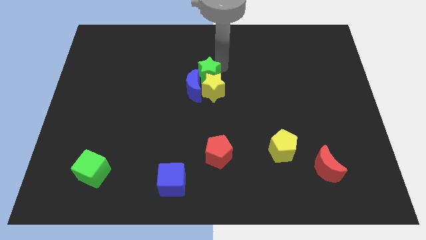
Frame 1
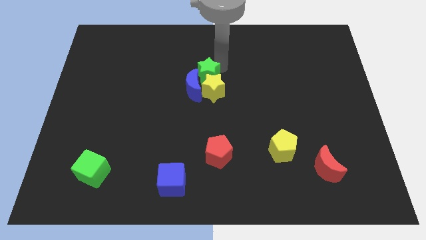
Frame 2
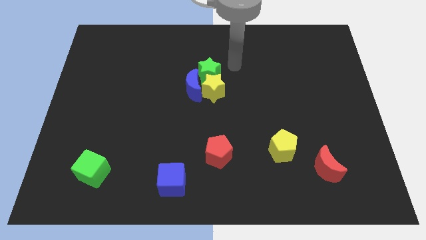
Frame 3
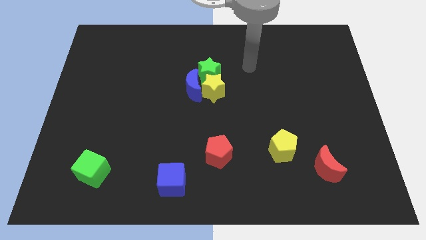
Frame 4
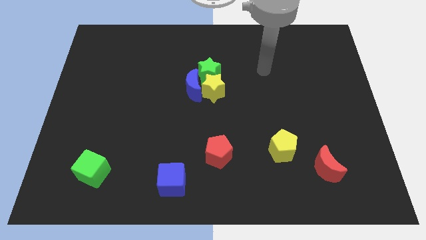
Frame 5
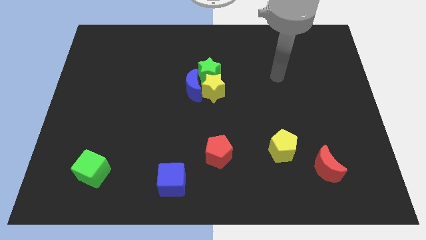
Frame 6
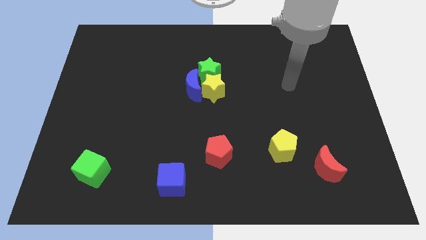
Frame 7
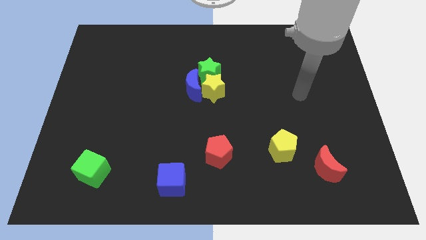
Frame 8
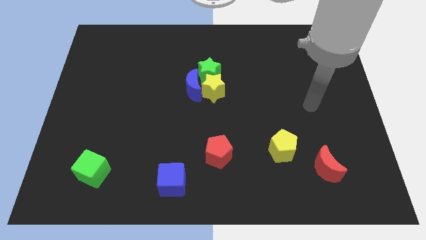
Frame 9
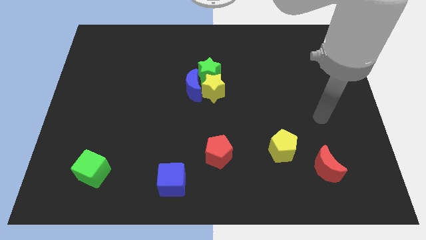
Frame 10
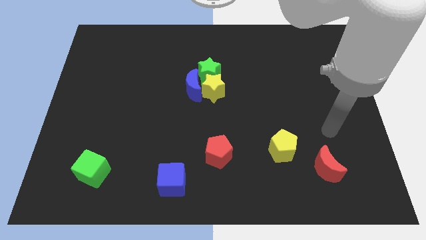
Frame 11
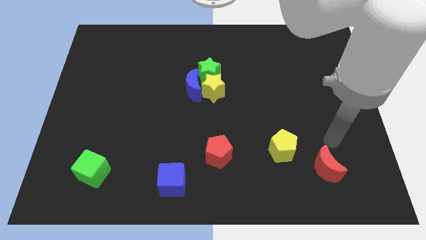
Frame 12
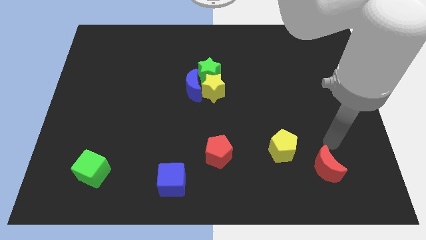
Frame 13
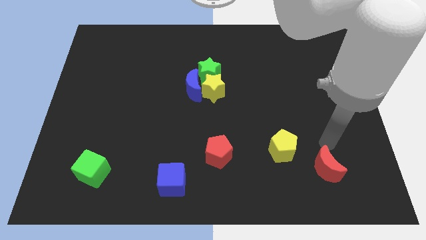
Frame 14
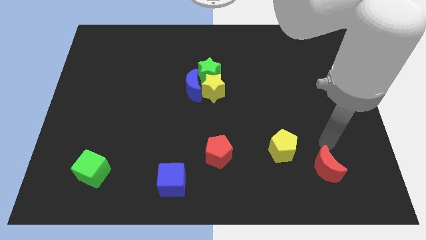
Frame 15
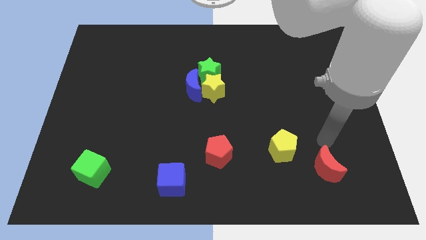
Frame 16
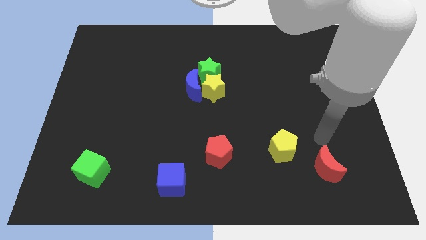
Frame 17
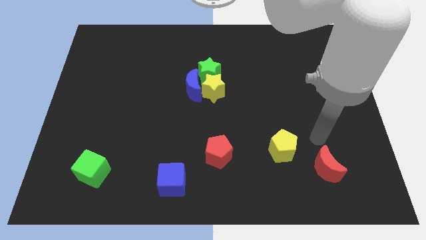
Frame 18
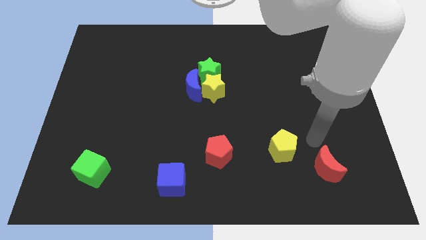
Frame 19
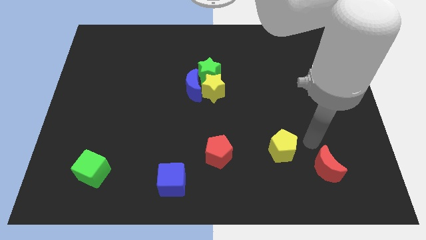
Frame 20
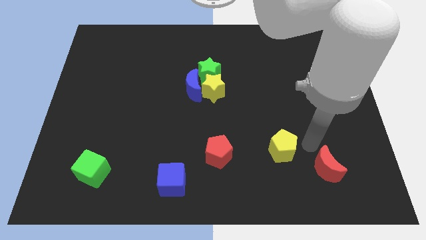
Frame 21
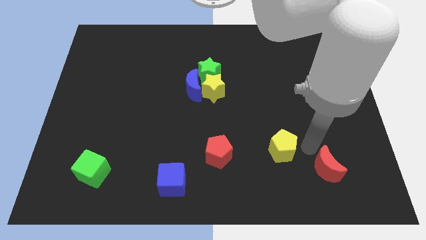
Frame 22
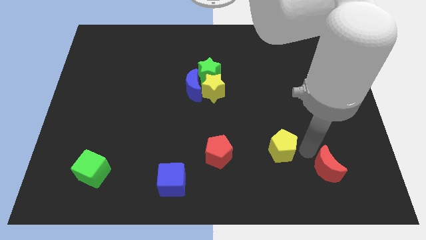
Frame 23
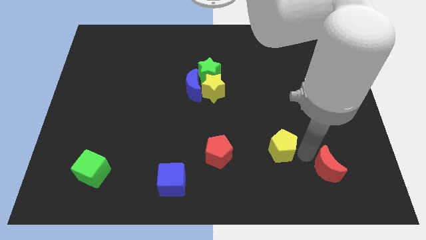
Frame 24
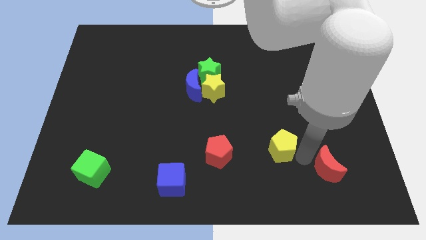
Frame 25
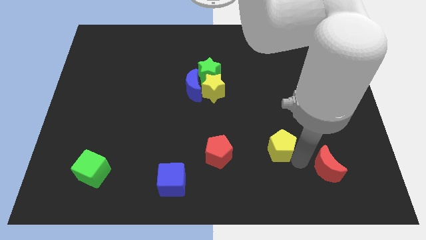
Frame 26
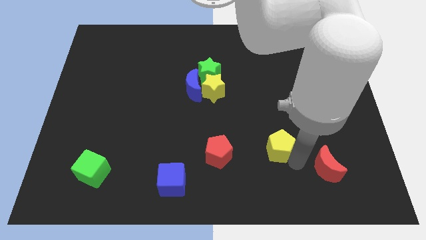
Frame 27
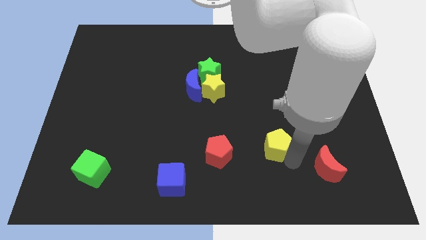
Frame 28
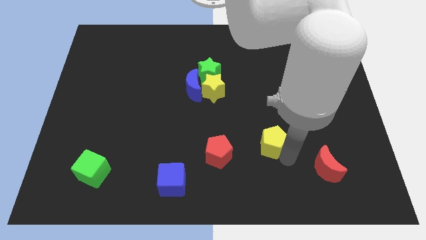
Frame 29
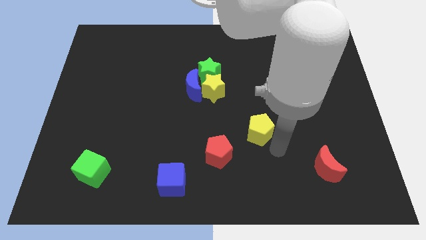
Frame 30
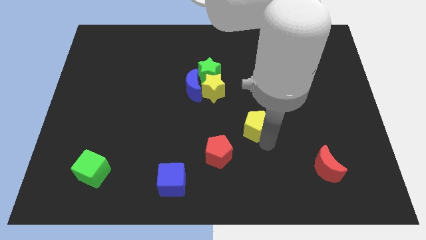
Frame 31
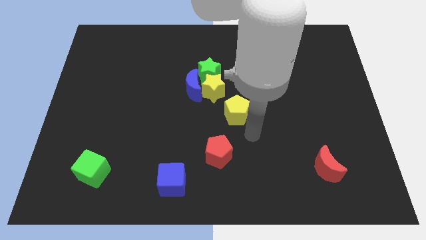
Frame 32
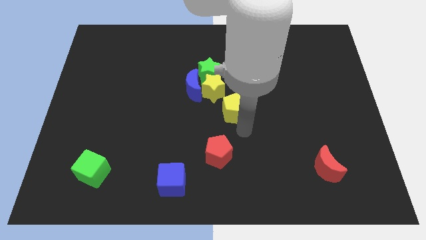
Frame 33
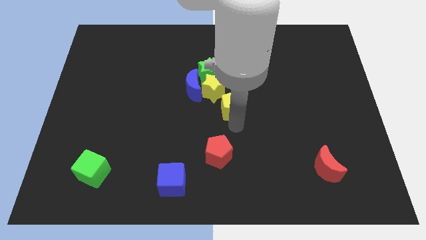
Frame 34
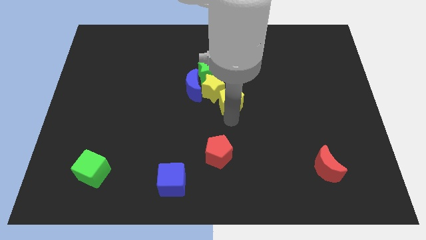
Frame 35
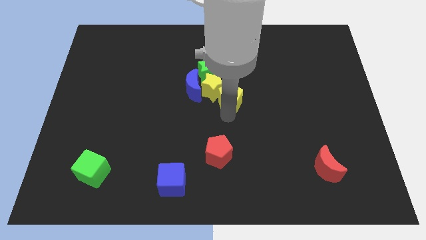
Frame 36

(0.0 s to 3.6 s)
move the yellow pentagon close to the bottom of the yellow star

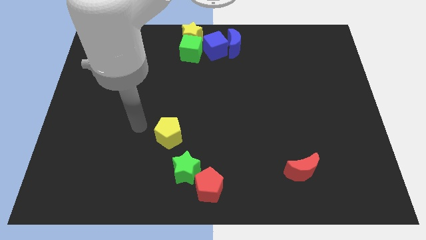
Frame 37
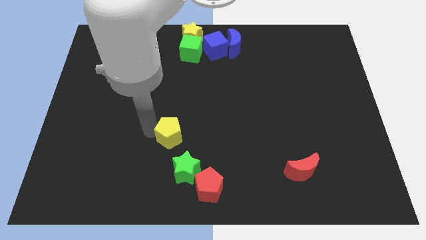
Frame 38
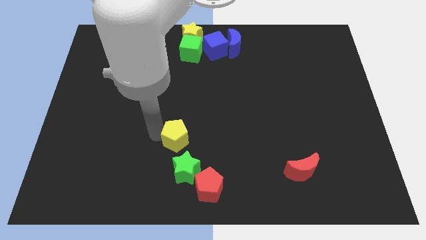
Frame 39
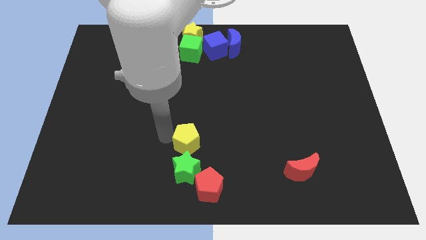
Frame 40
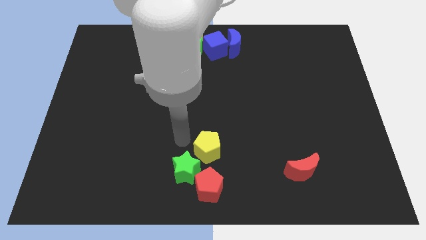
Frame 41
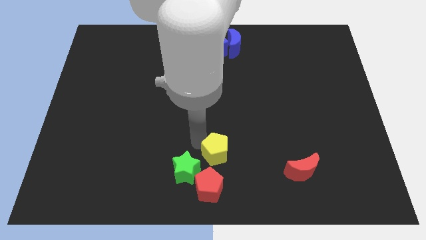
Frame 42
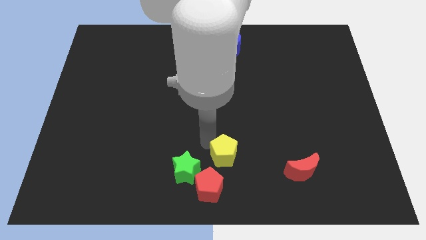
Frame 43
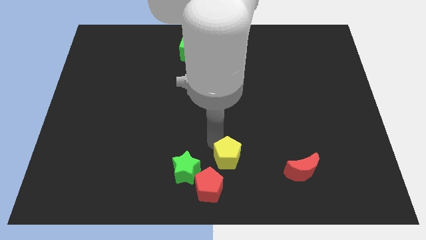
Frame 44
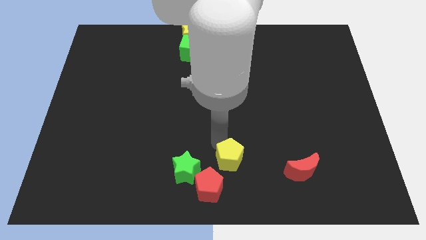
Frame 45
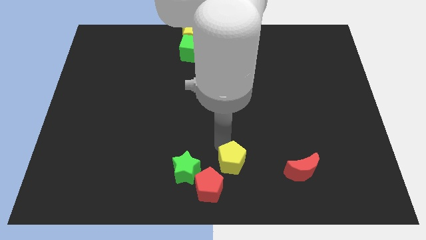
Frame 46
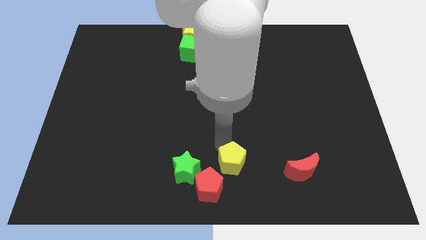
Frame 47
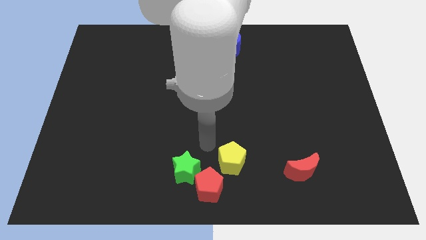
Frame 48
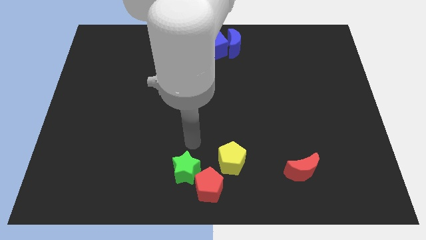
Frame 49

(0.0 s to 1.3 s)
move yellow pentagon near red pentagon

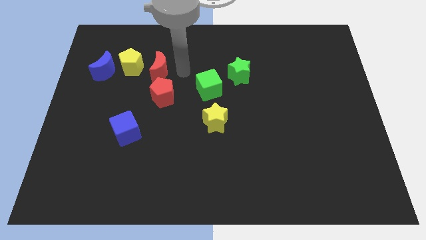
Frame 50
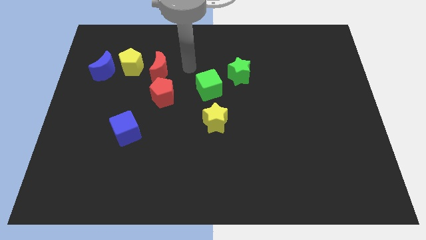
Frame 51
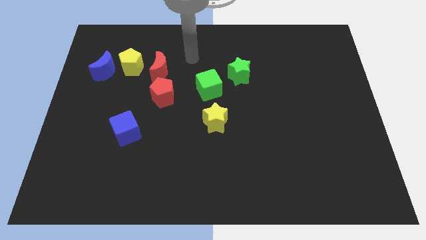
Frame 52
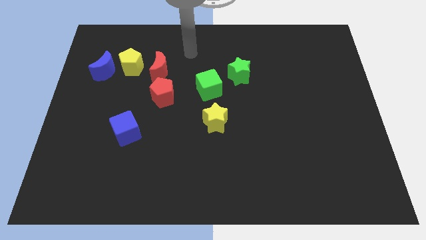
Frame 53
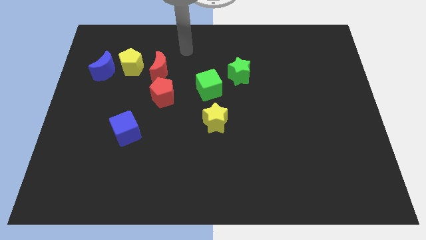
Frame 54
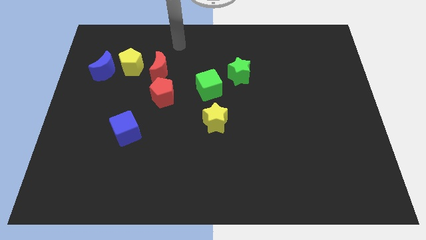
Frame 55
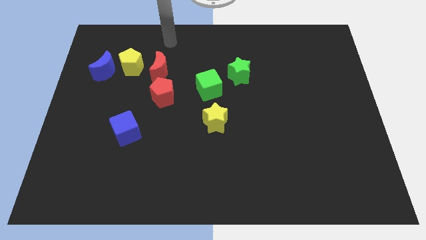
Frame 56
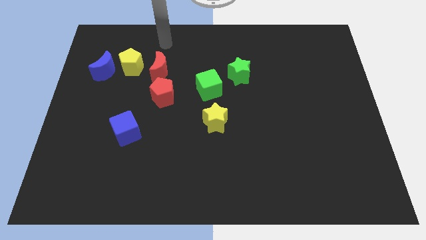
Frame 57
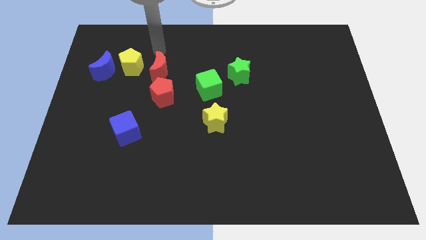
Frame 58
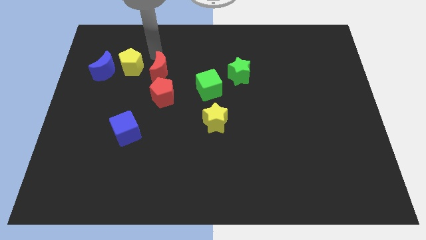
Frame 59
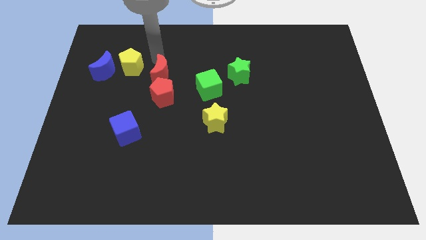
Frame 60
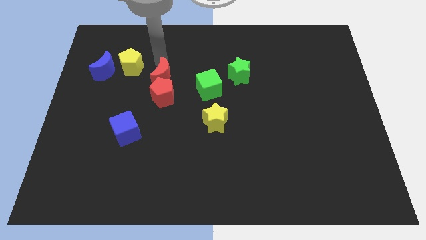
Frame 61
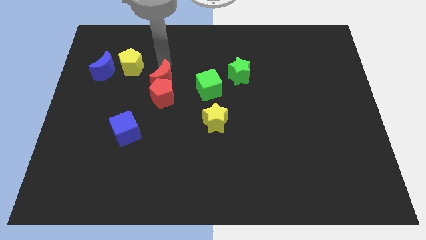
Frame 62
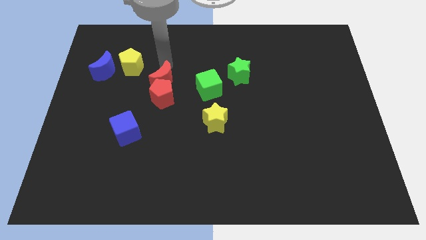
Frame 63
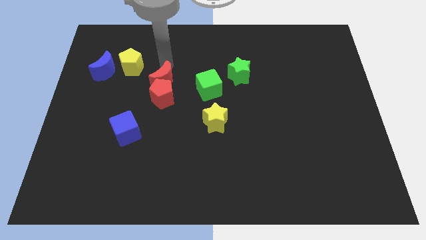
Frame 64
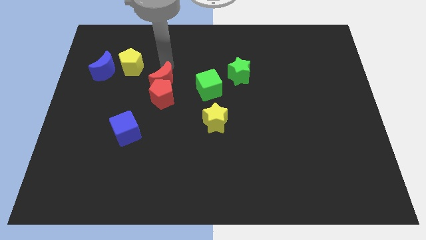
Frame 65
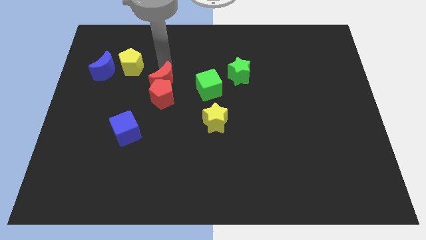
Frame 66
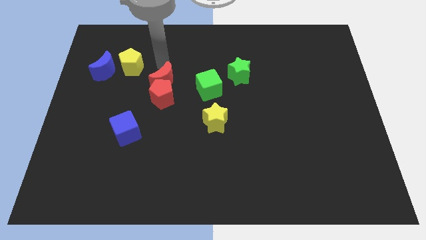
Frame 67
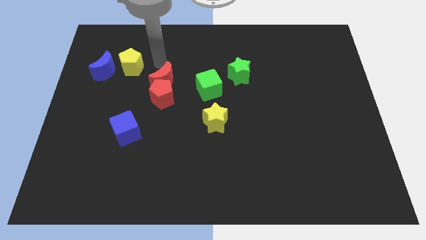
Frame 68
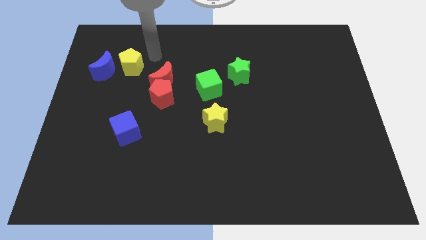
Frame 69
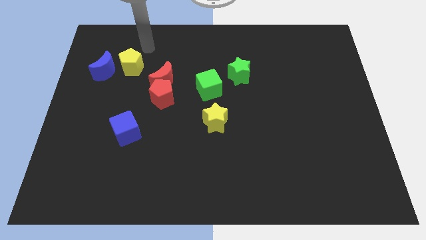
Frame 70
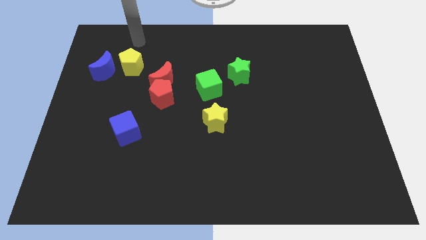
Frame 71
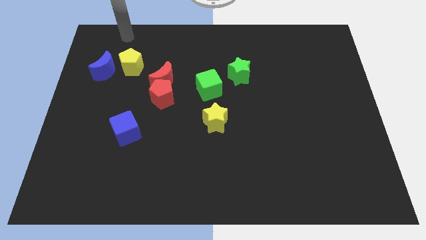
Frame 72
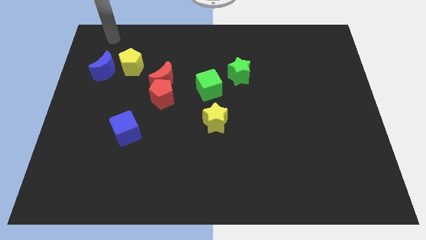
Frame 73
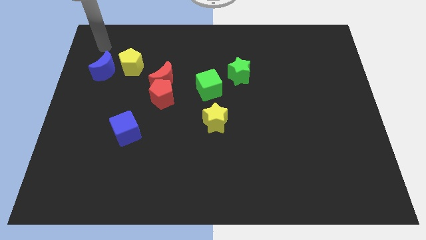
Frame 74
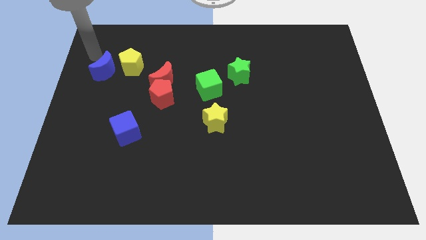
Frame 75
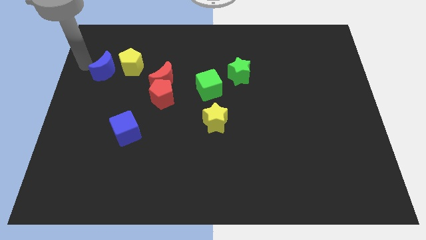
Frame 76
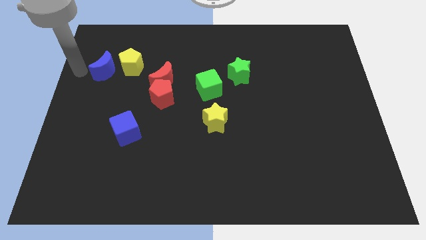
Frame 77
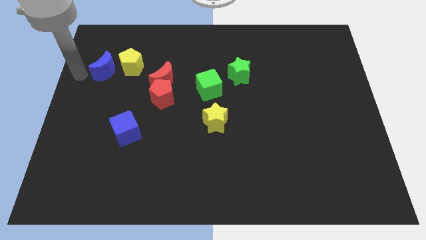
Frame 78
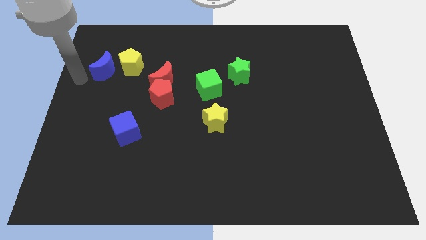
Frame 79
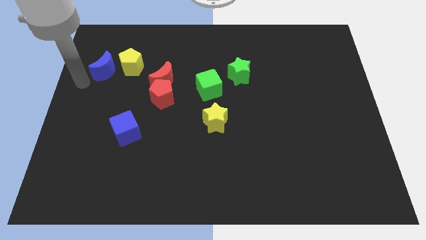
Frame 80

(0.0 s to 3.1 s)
move the red crescent into the red pentagon

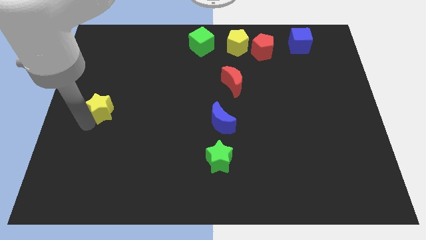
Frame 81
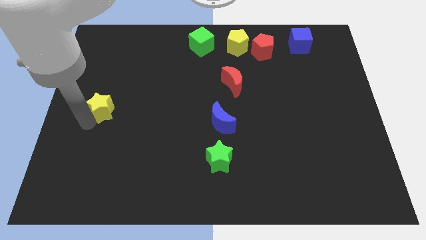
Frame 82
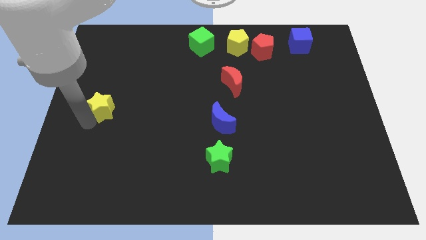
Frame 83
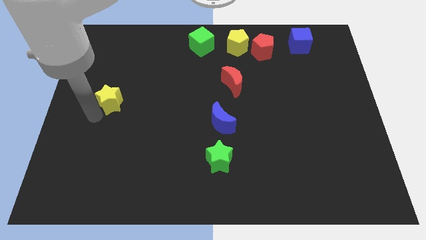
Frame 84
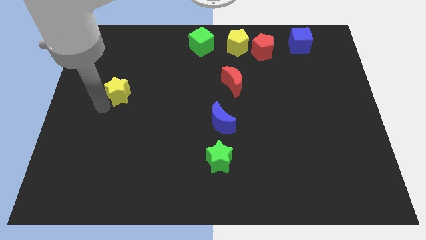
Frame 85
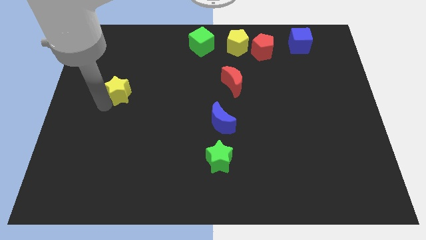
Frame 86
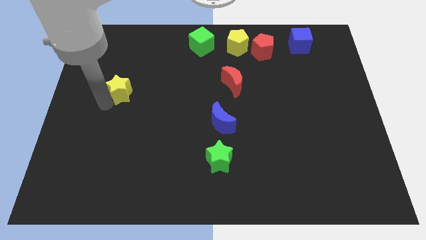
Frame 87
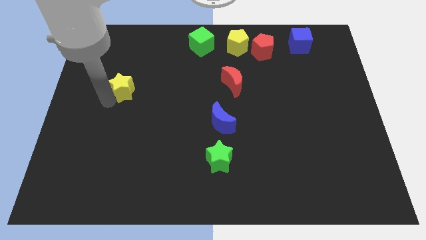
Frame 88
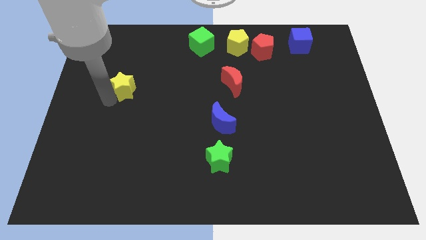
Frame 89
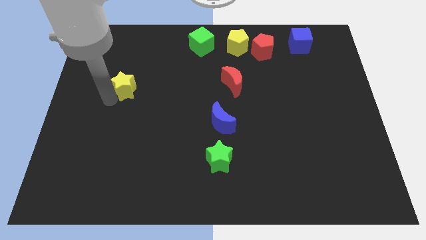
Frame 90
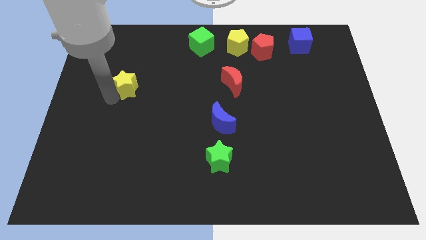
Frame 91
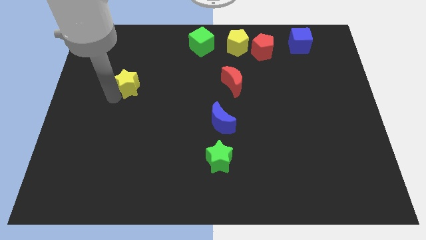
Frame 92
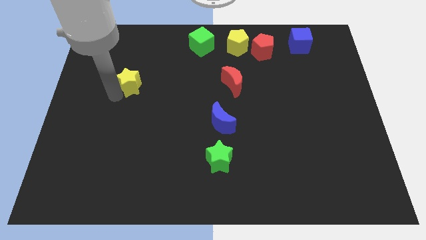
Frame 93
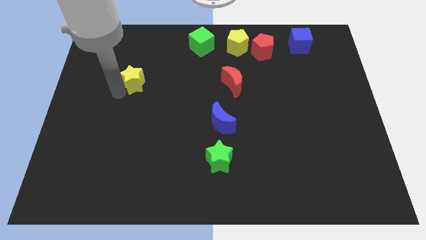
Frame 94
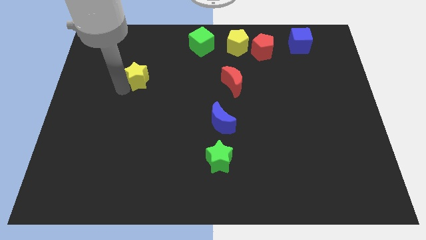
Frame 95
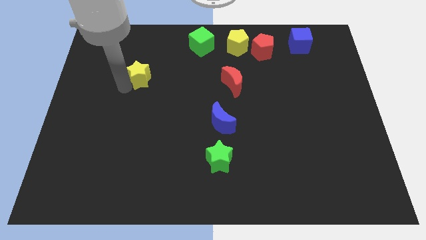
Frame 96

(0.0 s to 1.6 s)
push the yellow star to the top of the board
